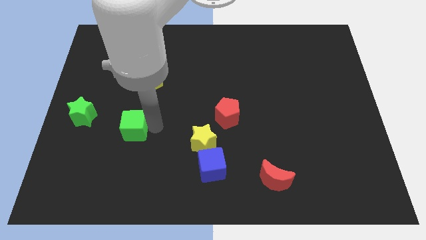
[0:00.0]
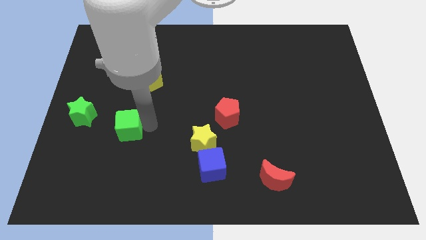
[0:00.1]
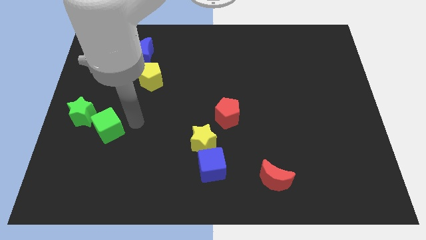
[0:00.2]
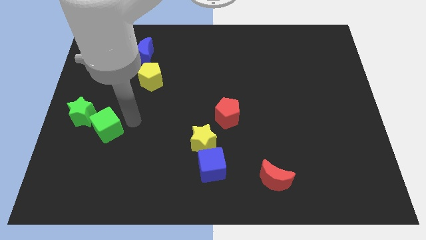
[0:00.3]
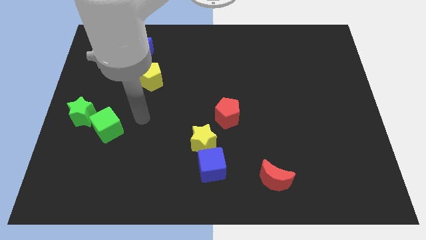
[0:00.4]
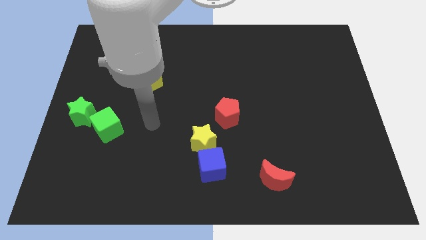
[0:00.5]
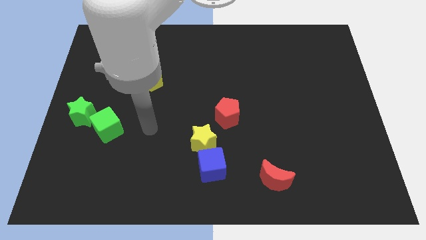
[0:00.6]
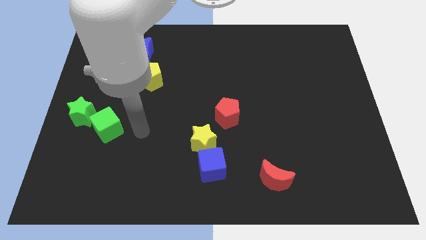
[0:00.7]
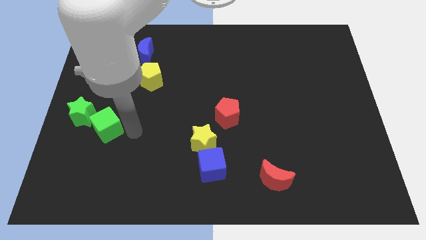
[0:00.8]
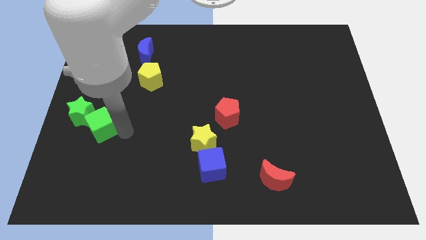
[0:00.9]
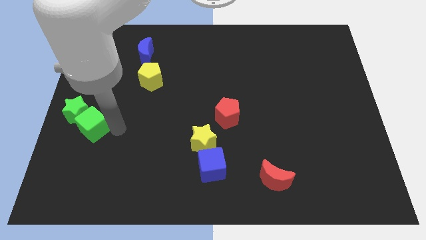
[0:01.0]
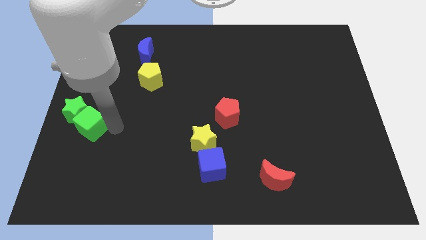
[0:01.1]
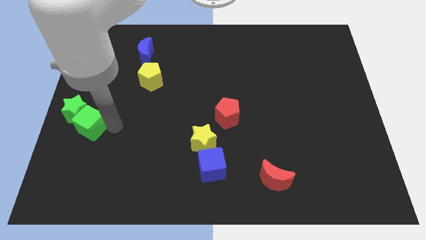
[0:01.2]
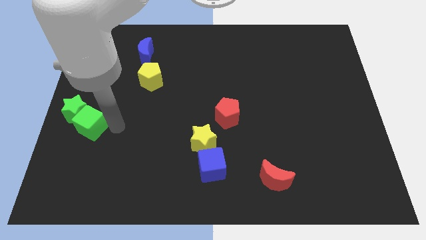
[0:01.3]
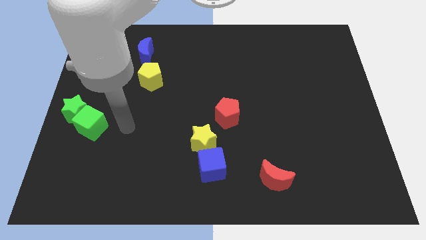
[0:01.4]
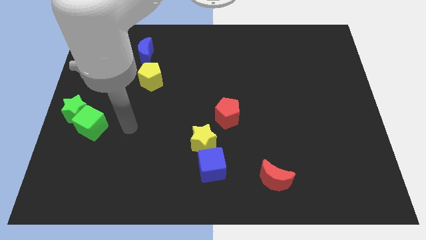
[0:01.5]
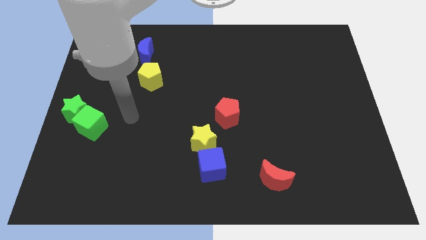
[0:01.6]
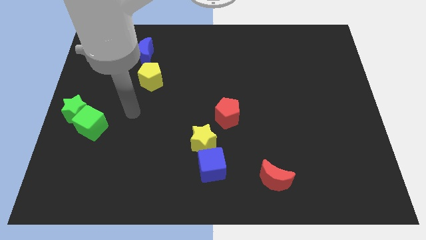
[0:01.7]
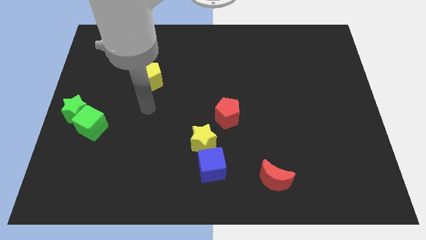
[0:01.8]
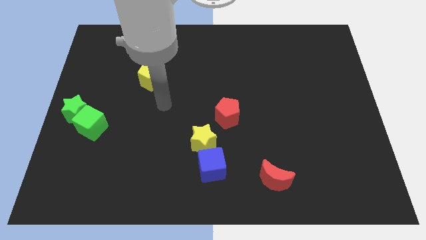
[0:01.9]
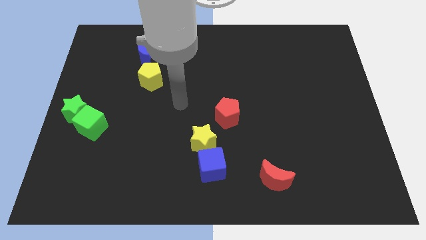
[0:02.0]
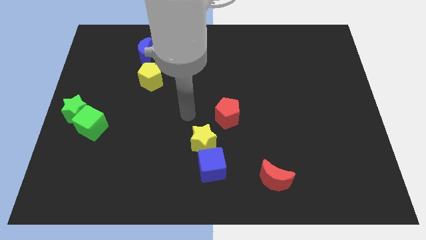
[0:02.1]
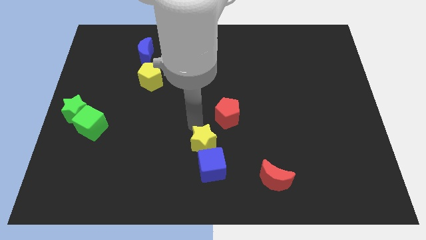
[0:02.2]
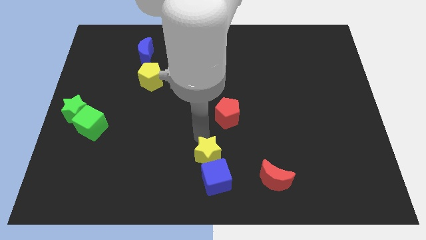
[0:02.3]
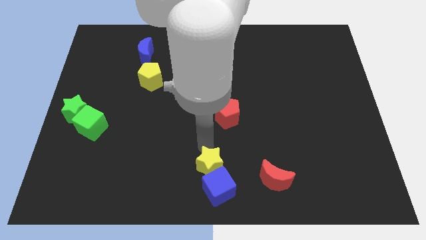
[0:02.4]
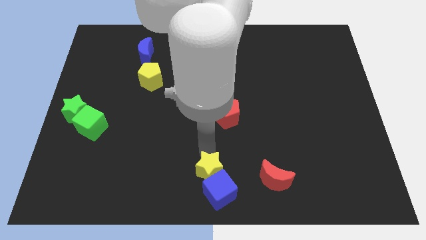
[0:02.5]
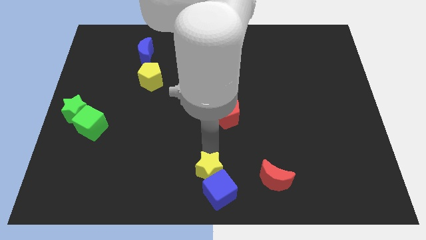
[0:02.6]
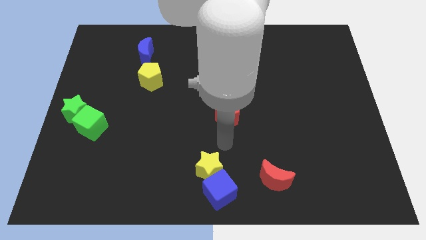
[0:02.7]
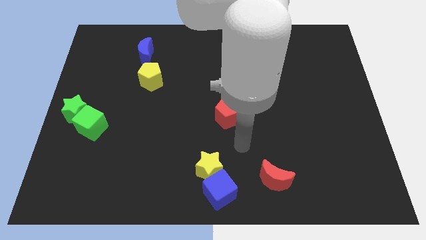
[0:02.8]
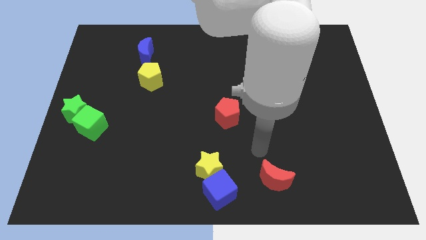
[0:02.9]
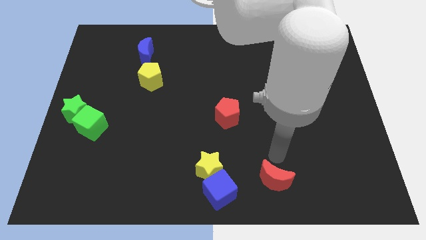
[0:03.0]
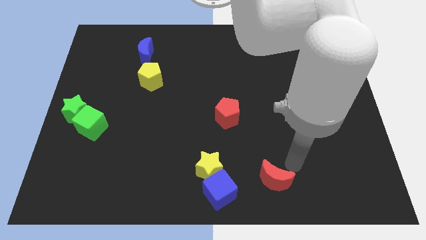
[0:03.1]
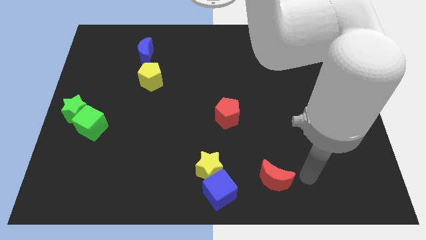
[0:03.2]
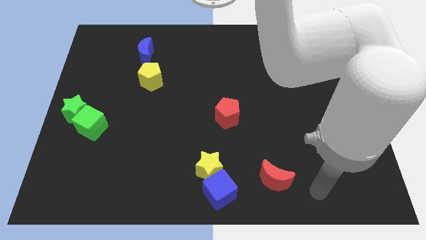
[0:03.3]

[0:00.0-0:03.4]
push the green cube to the left center move yellow star to the bottom center

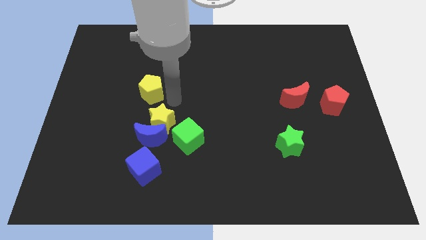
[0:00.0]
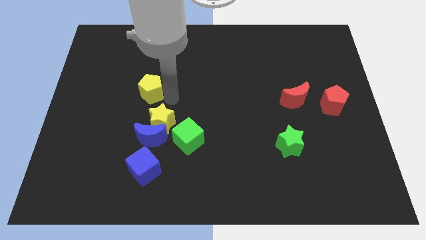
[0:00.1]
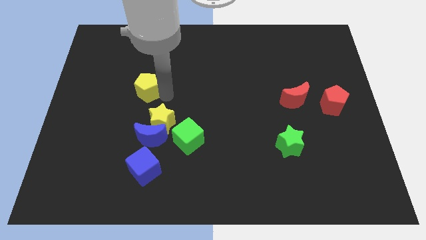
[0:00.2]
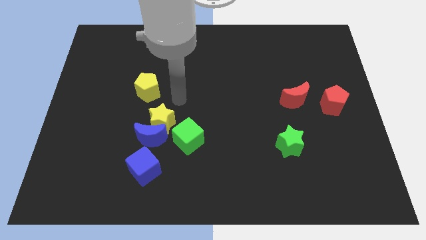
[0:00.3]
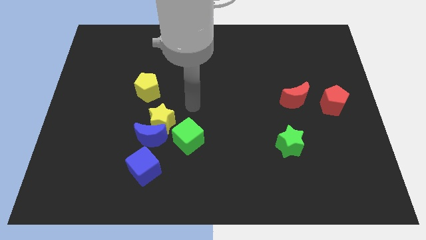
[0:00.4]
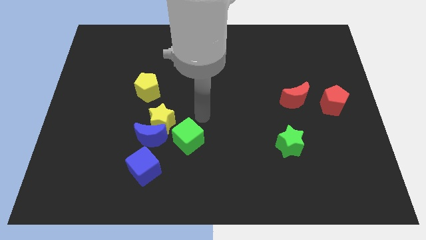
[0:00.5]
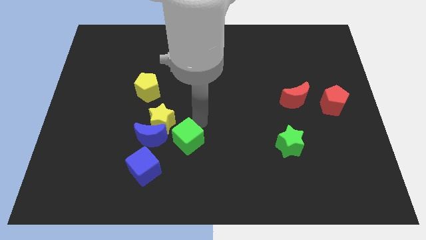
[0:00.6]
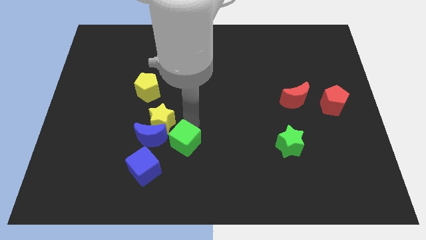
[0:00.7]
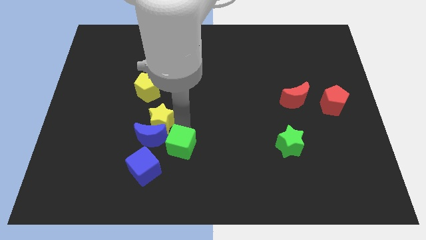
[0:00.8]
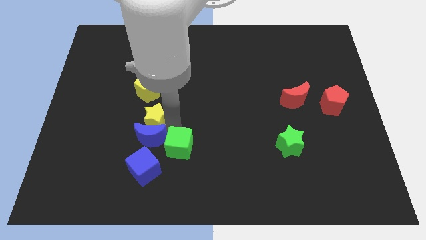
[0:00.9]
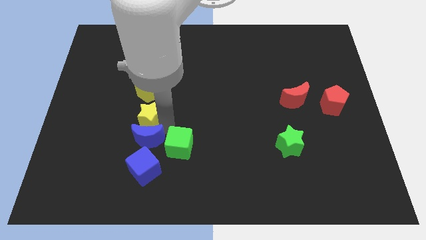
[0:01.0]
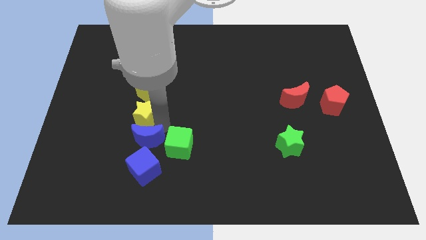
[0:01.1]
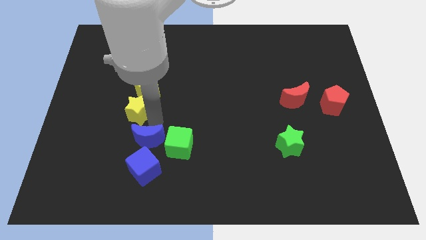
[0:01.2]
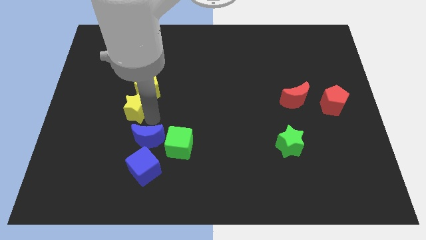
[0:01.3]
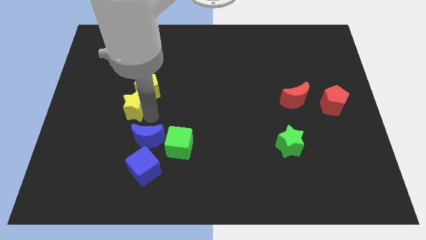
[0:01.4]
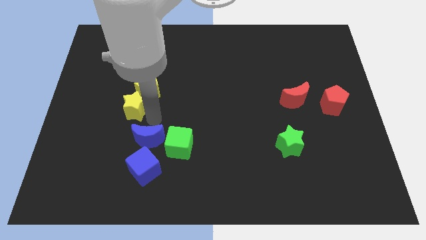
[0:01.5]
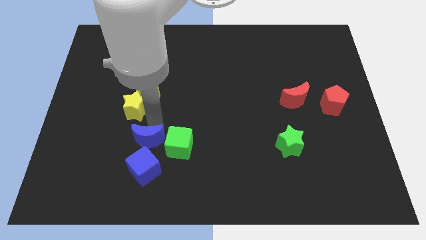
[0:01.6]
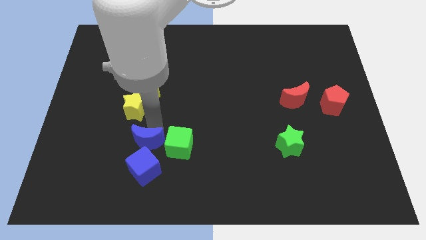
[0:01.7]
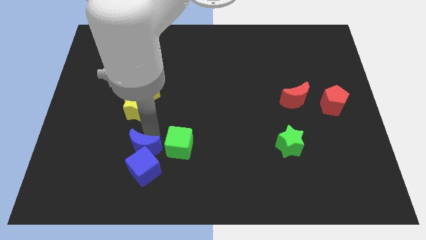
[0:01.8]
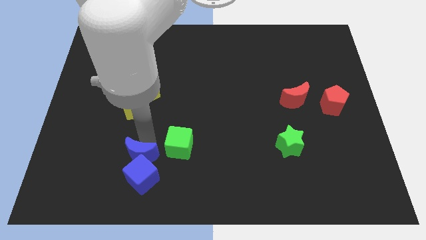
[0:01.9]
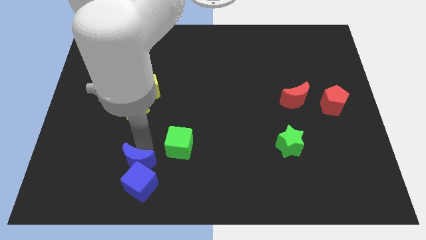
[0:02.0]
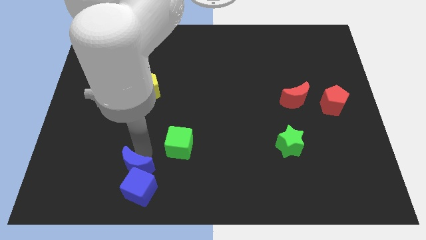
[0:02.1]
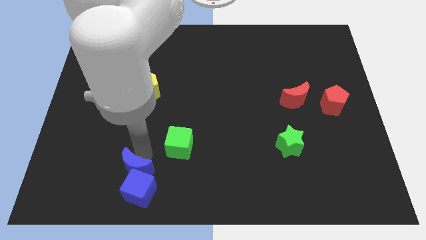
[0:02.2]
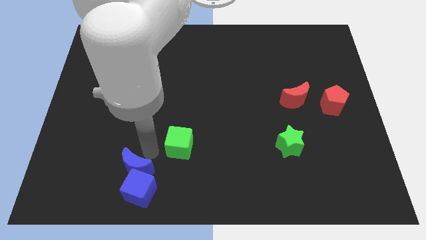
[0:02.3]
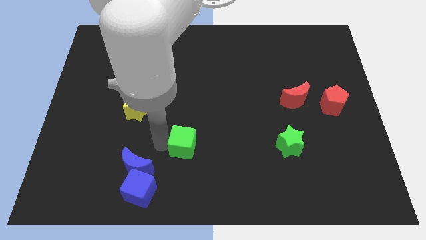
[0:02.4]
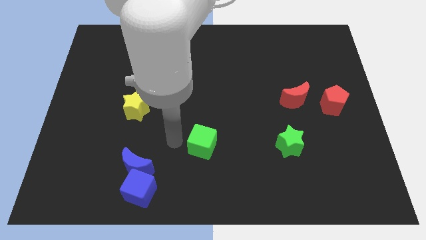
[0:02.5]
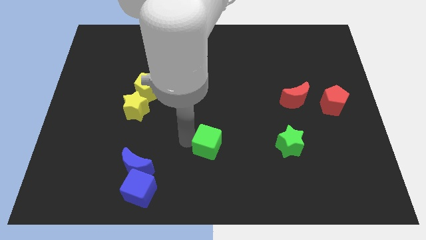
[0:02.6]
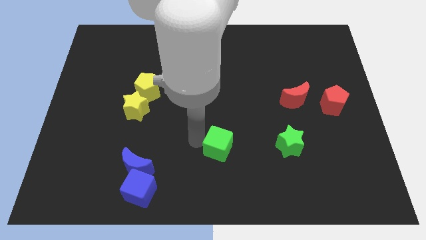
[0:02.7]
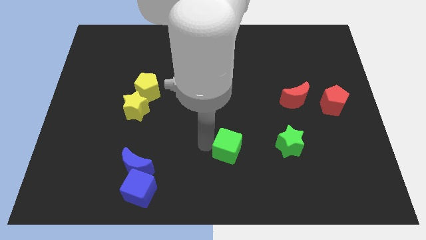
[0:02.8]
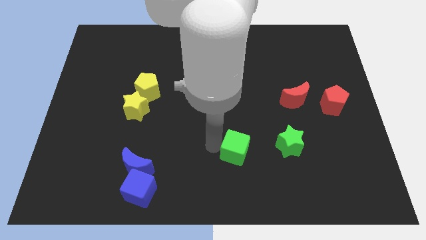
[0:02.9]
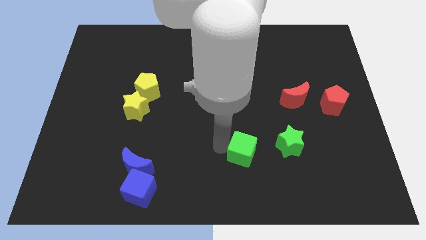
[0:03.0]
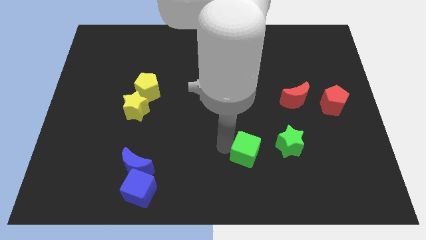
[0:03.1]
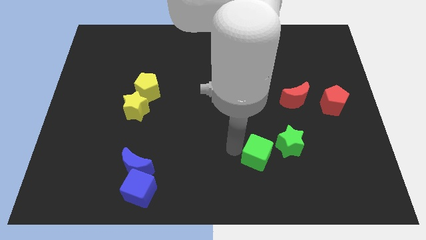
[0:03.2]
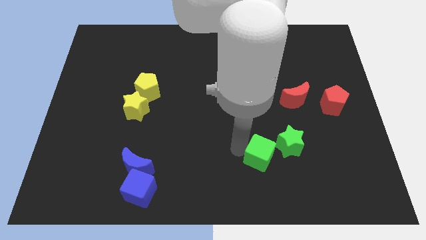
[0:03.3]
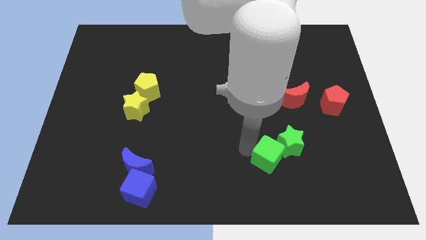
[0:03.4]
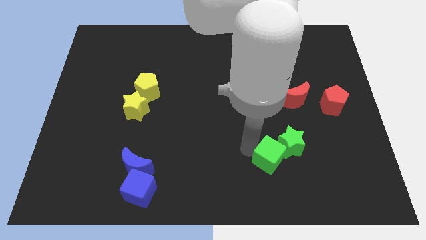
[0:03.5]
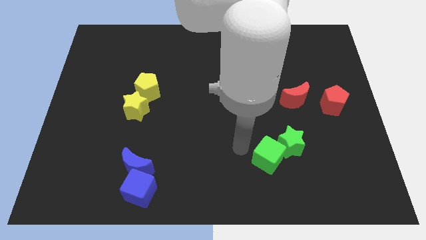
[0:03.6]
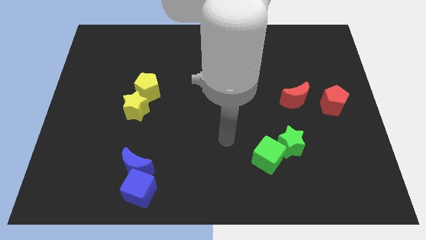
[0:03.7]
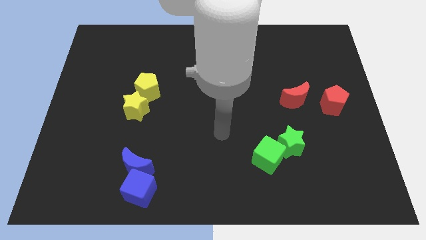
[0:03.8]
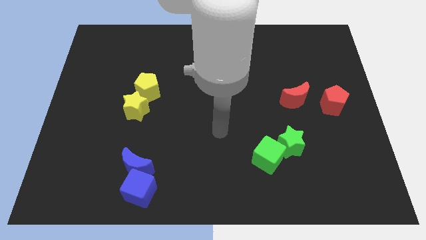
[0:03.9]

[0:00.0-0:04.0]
push the yellow green and blue blocks in different directions

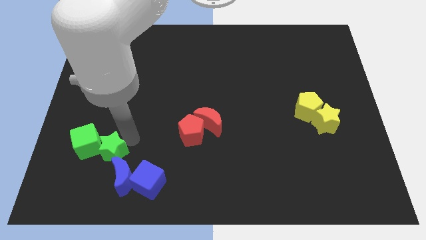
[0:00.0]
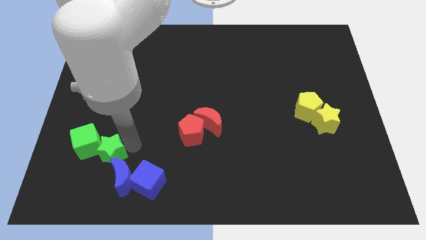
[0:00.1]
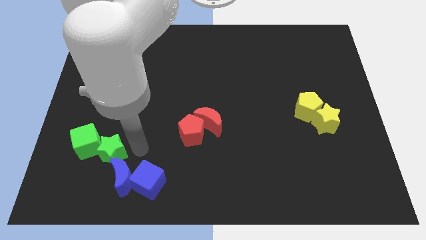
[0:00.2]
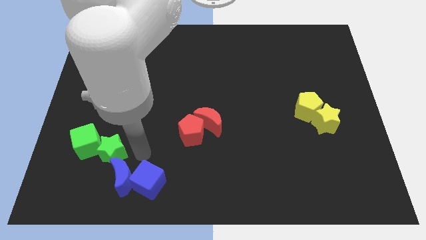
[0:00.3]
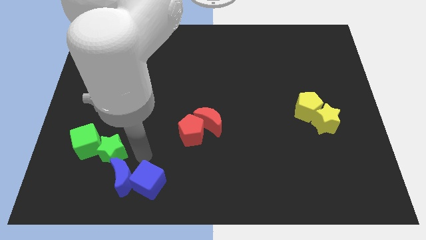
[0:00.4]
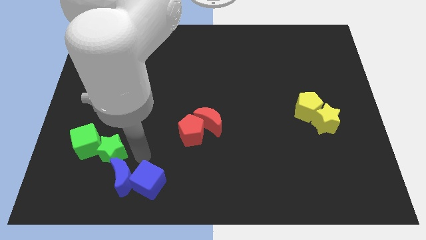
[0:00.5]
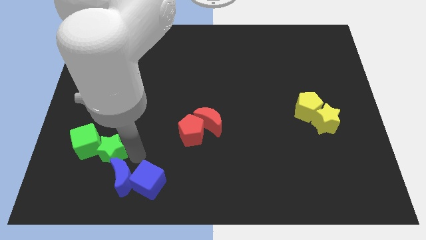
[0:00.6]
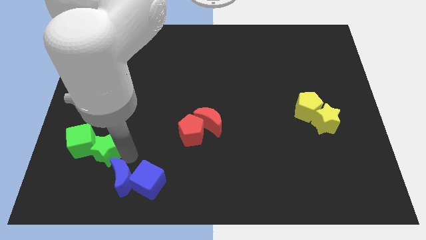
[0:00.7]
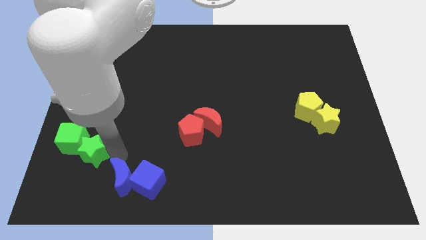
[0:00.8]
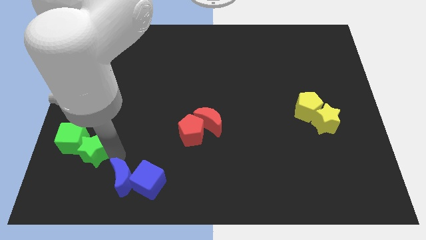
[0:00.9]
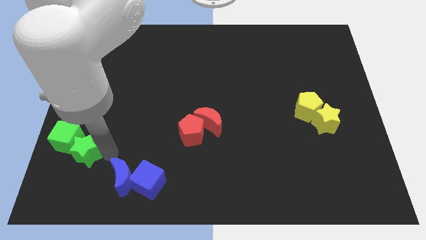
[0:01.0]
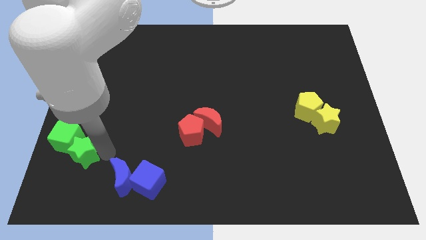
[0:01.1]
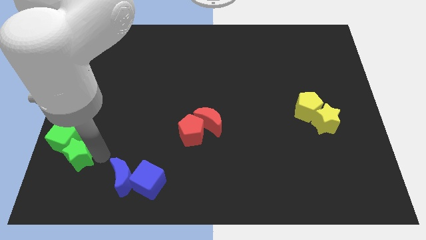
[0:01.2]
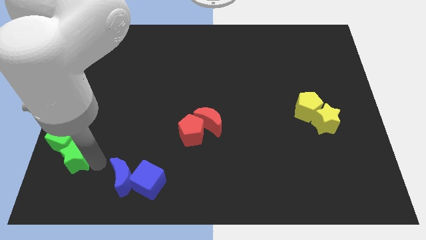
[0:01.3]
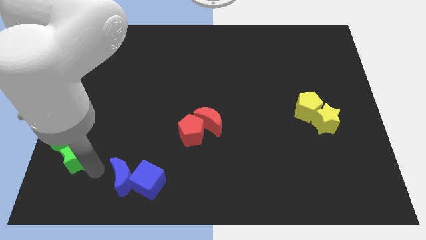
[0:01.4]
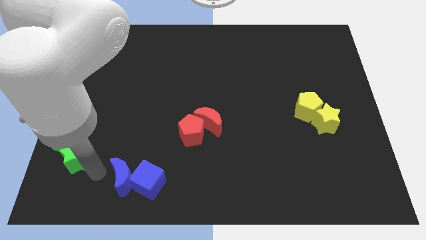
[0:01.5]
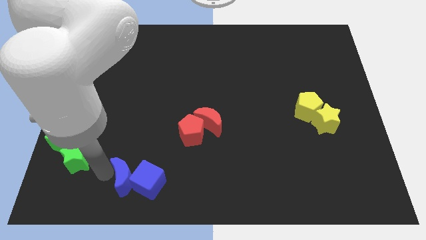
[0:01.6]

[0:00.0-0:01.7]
slide the green blocks to the left side of the board
